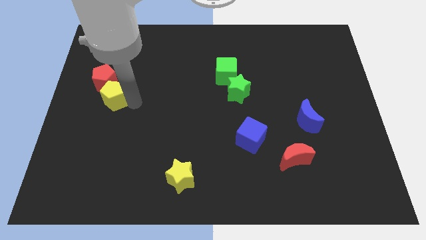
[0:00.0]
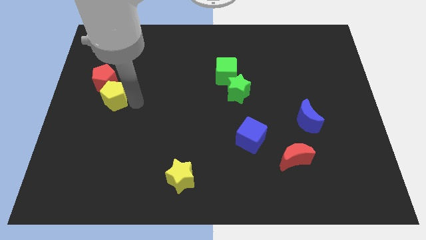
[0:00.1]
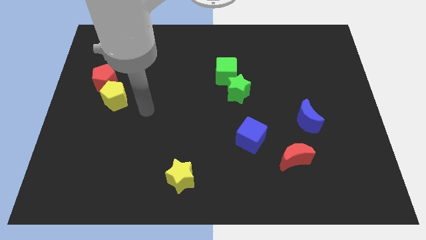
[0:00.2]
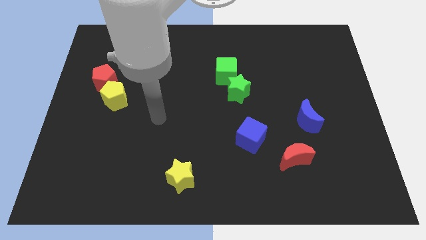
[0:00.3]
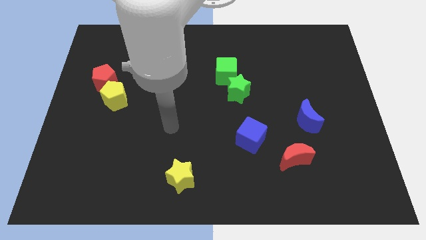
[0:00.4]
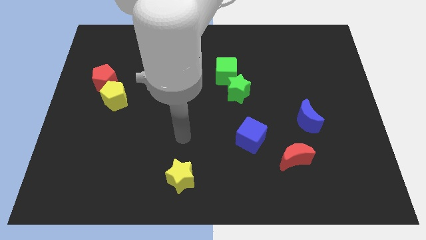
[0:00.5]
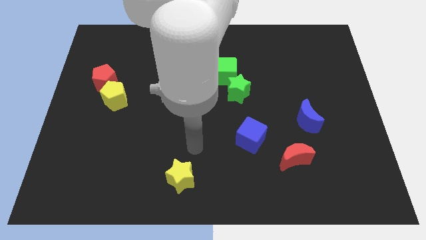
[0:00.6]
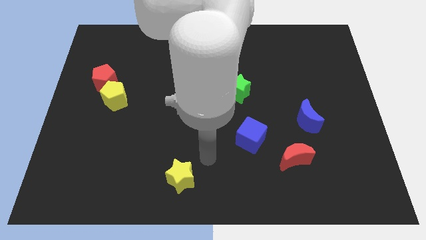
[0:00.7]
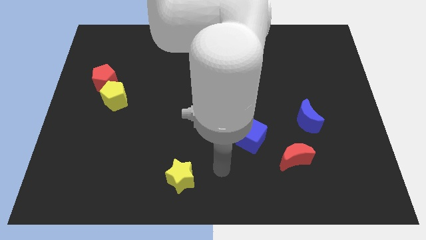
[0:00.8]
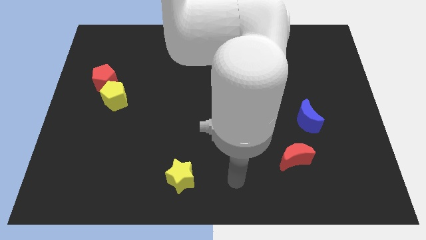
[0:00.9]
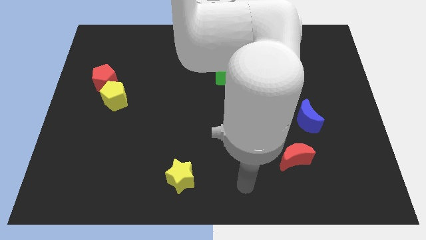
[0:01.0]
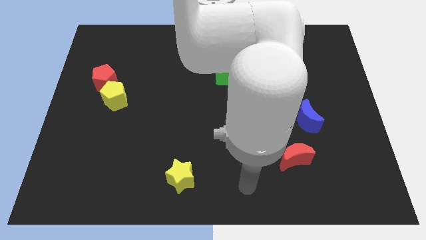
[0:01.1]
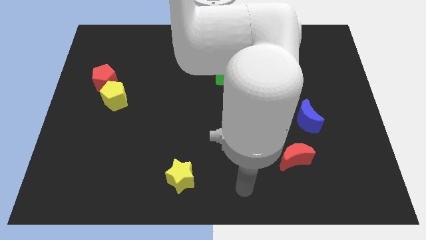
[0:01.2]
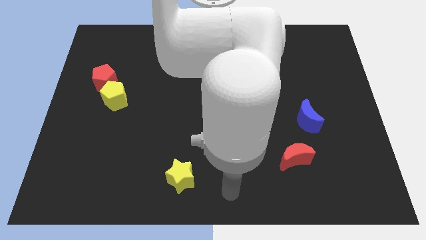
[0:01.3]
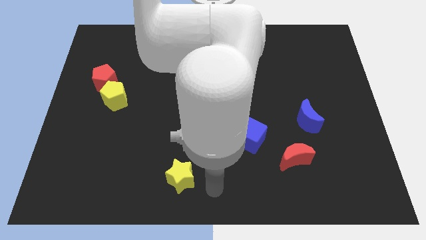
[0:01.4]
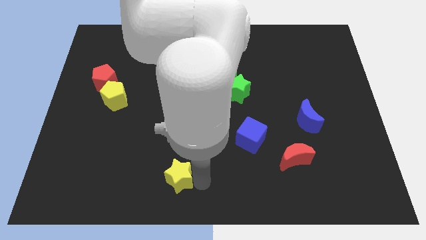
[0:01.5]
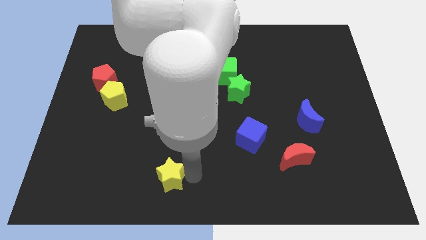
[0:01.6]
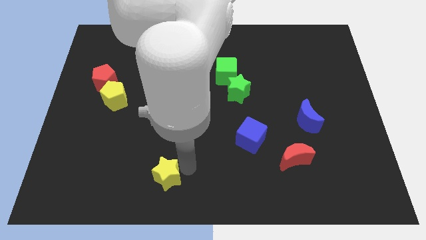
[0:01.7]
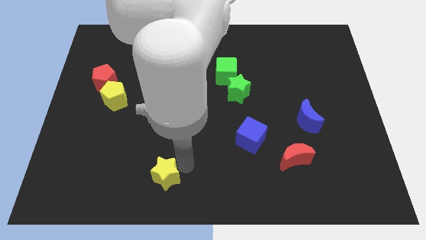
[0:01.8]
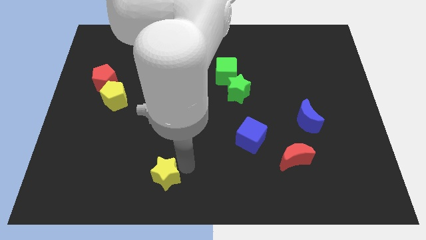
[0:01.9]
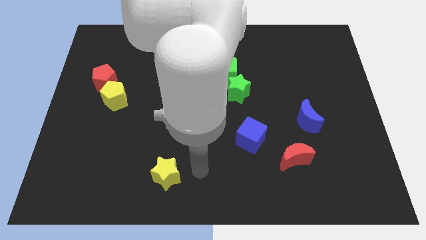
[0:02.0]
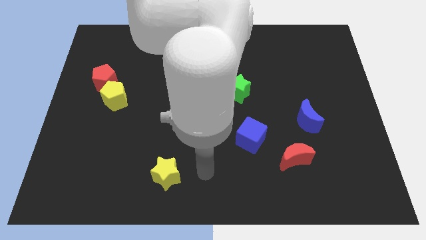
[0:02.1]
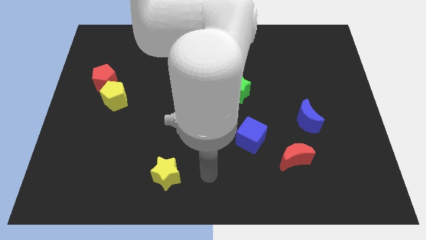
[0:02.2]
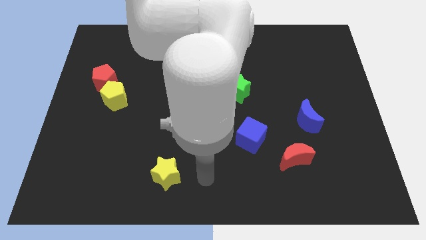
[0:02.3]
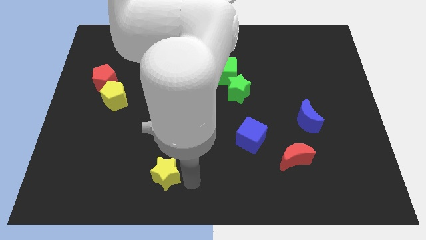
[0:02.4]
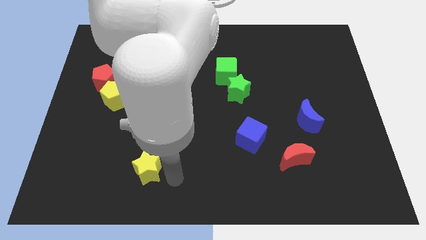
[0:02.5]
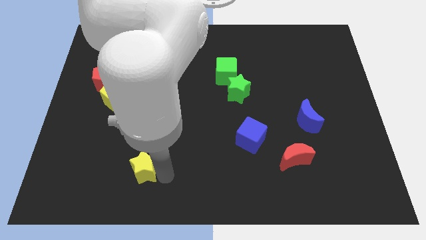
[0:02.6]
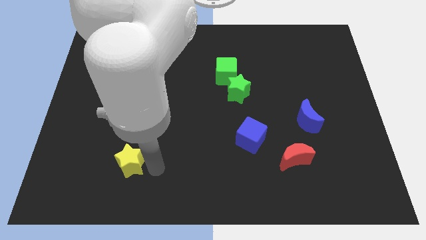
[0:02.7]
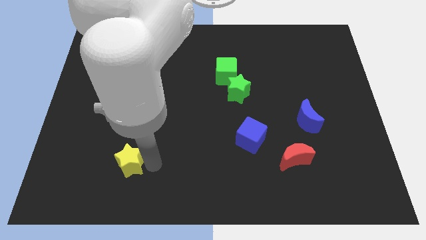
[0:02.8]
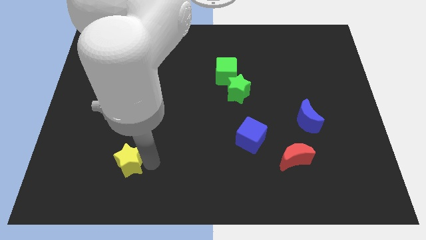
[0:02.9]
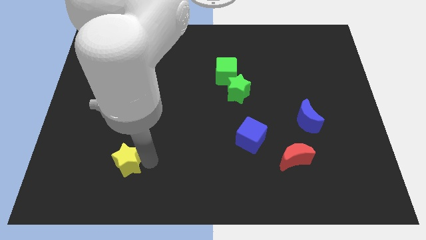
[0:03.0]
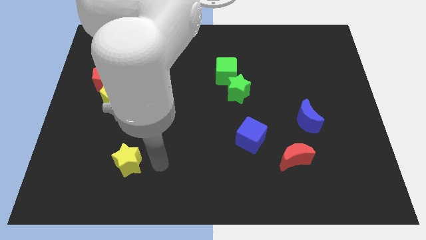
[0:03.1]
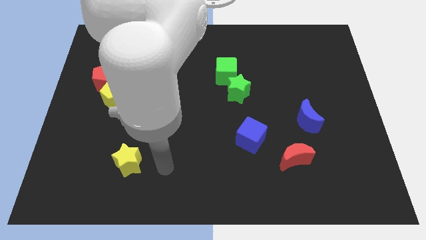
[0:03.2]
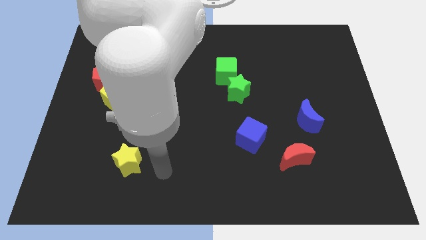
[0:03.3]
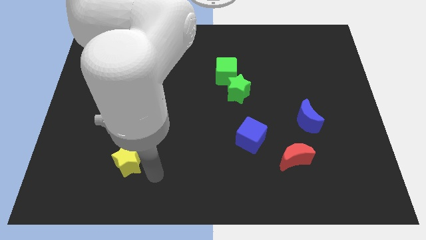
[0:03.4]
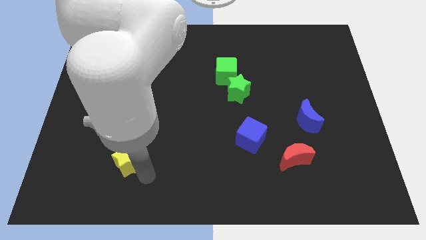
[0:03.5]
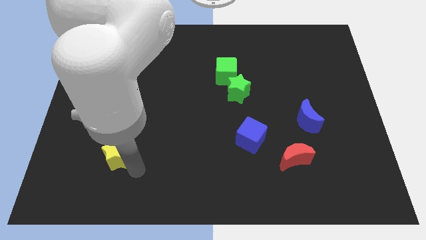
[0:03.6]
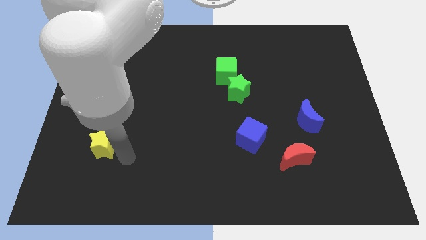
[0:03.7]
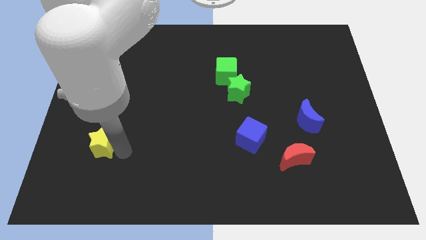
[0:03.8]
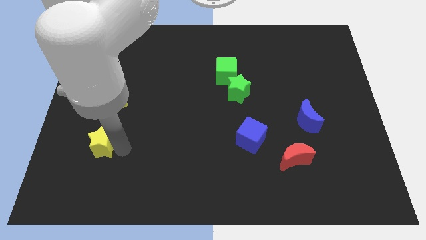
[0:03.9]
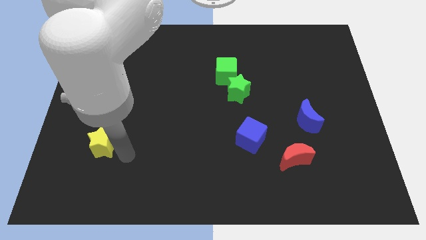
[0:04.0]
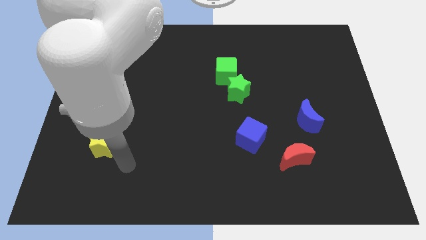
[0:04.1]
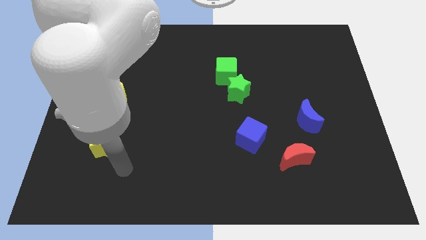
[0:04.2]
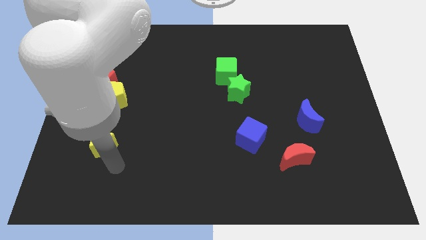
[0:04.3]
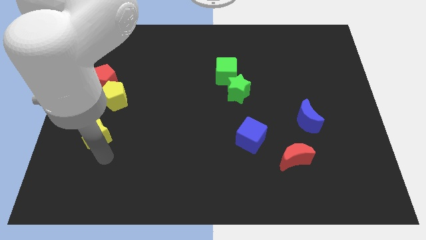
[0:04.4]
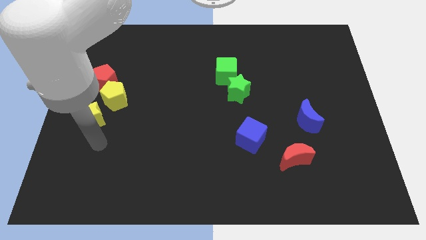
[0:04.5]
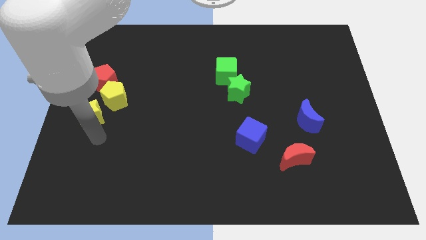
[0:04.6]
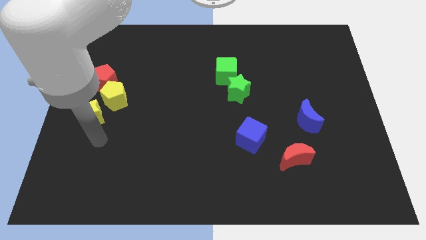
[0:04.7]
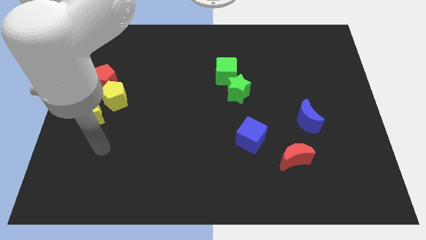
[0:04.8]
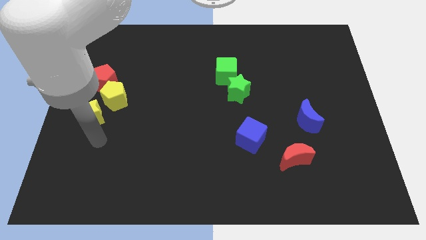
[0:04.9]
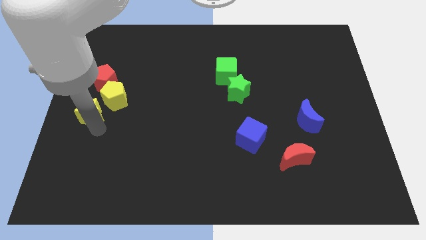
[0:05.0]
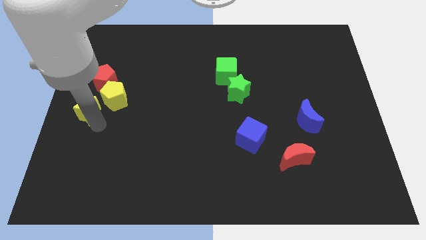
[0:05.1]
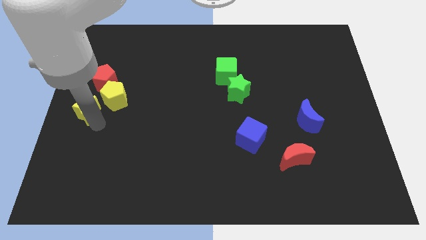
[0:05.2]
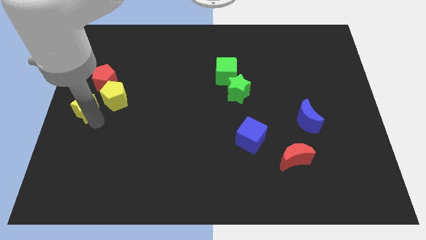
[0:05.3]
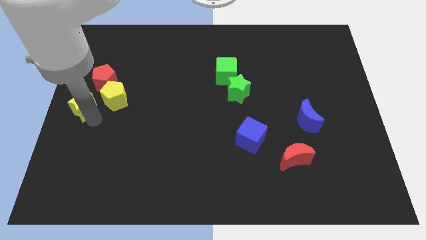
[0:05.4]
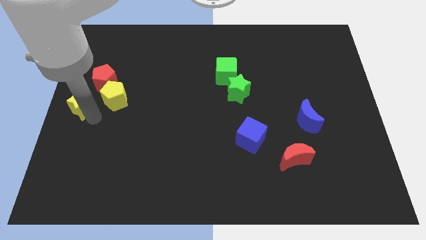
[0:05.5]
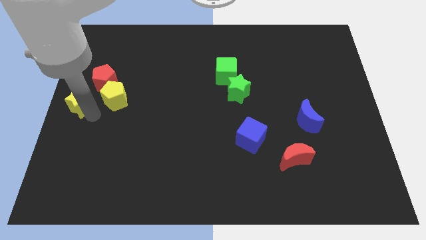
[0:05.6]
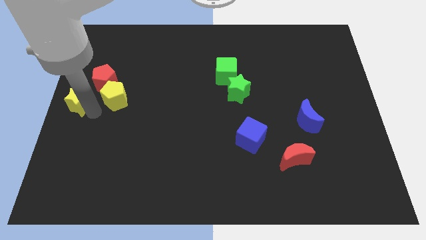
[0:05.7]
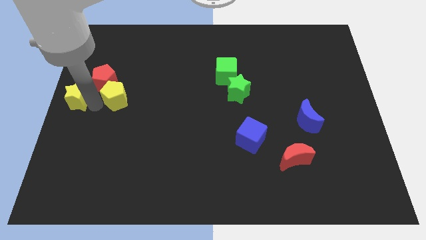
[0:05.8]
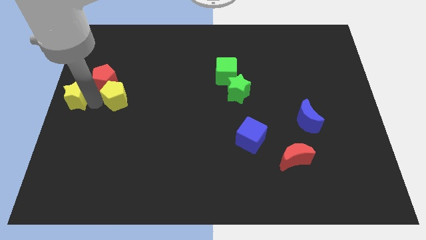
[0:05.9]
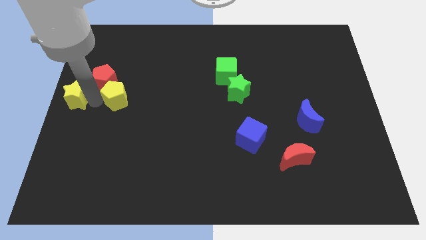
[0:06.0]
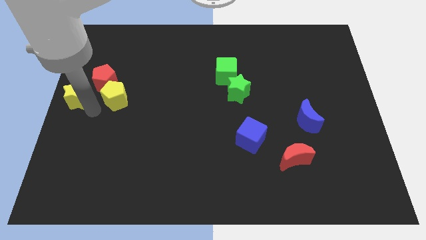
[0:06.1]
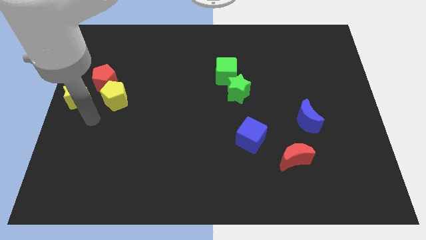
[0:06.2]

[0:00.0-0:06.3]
drag the yellow star towards the center left

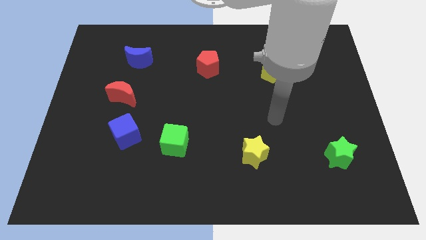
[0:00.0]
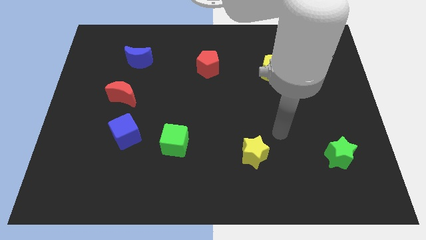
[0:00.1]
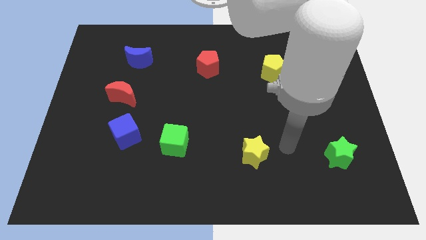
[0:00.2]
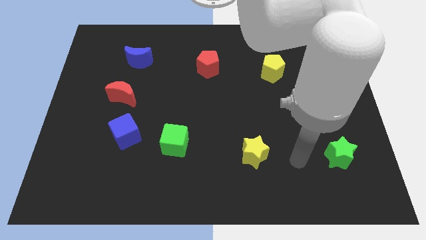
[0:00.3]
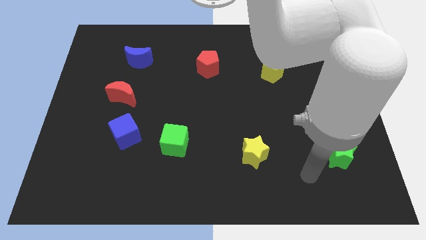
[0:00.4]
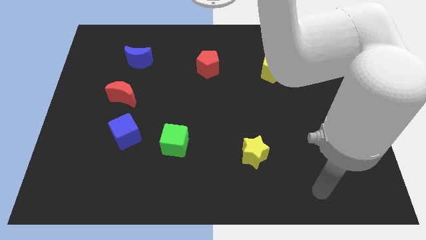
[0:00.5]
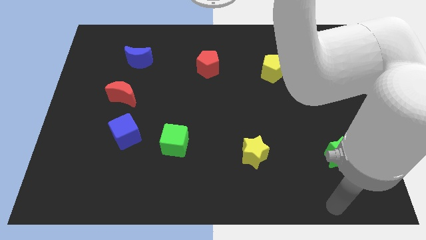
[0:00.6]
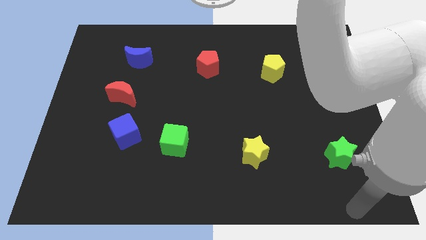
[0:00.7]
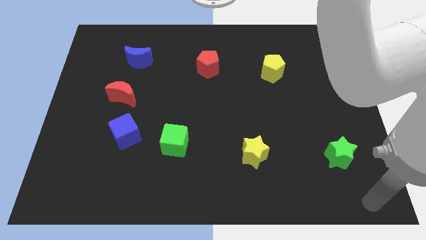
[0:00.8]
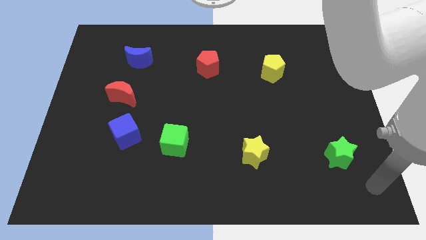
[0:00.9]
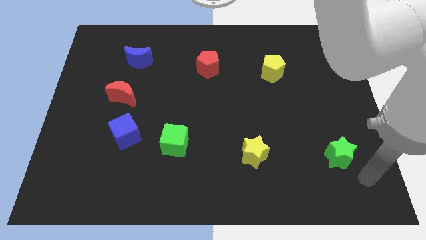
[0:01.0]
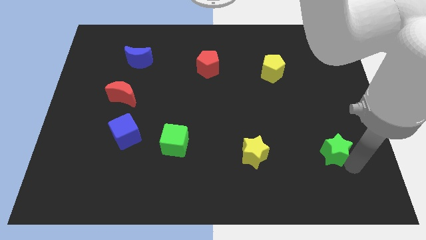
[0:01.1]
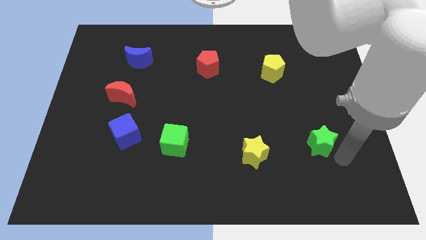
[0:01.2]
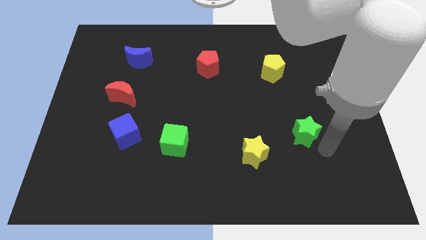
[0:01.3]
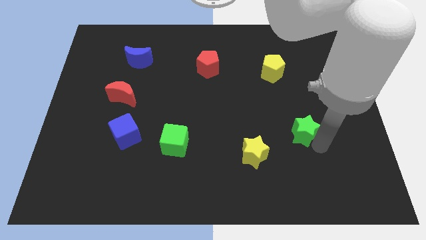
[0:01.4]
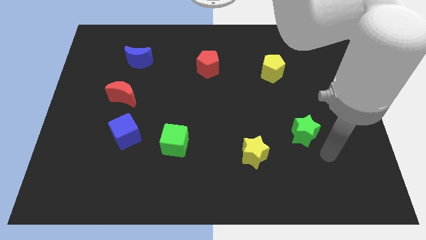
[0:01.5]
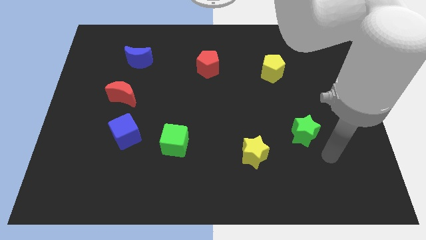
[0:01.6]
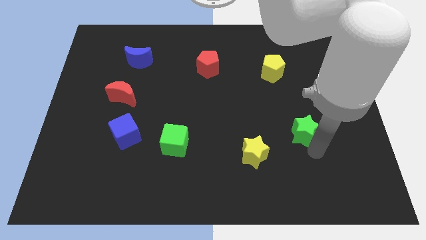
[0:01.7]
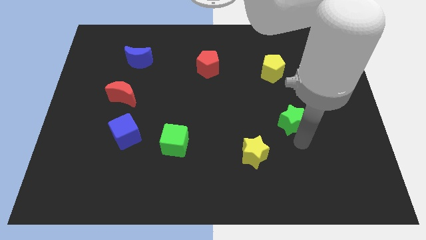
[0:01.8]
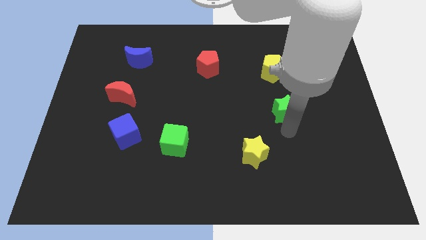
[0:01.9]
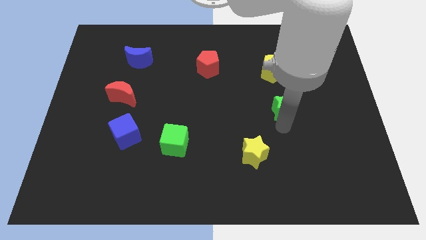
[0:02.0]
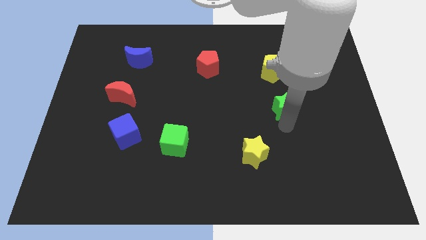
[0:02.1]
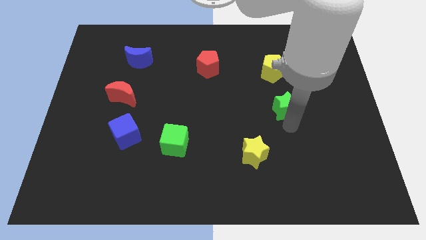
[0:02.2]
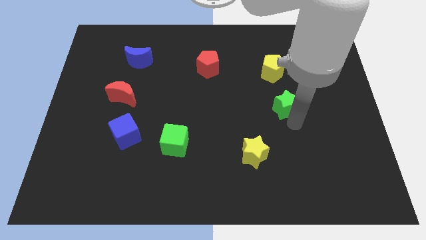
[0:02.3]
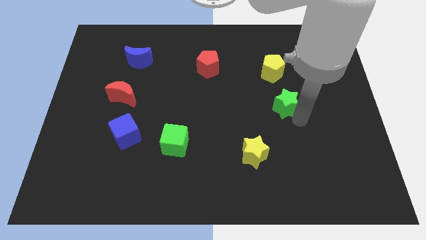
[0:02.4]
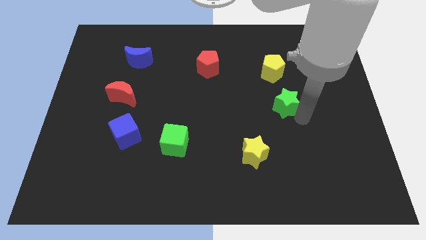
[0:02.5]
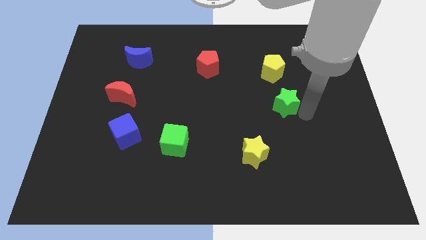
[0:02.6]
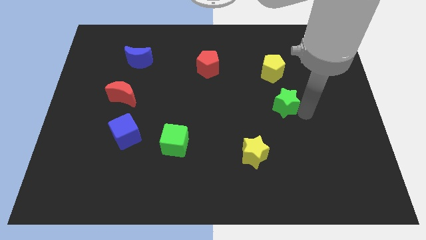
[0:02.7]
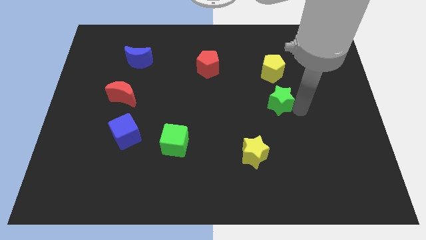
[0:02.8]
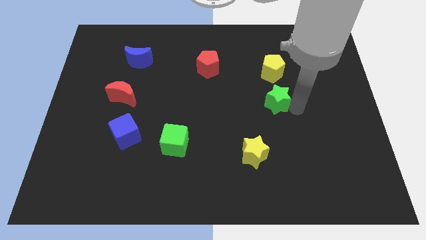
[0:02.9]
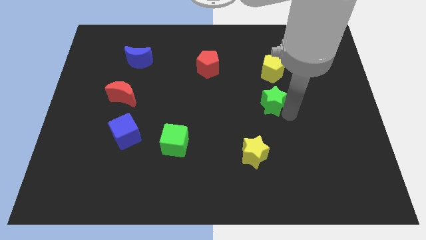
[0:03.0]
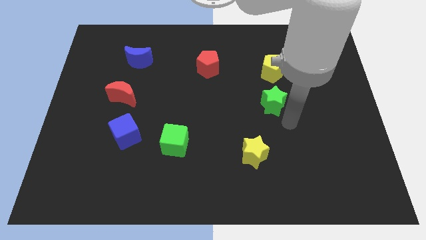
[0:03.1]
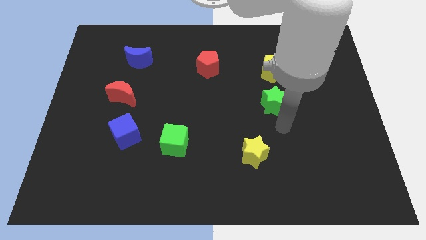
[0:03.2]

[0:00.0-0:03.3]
place the green star below the yellow pentagon
